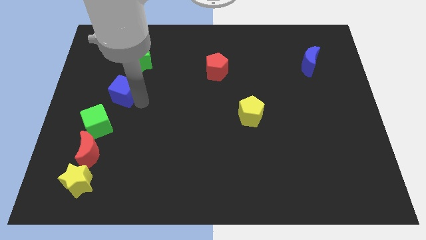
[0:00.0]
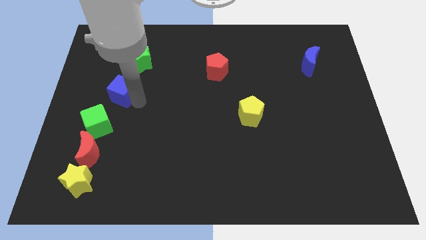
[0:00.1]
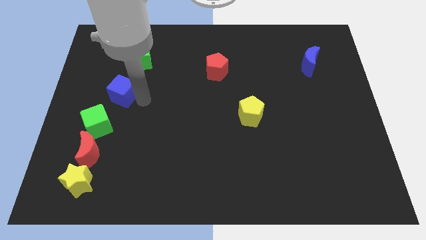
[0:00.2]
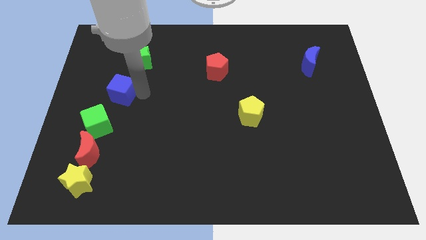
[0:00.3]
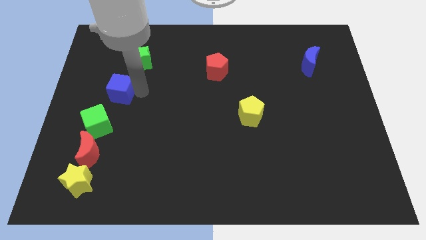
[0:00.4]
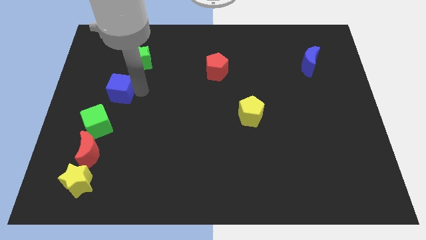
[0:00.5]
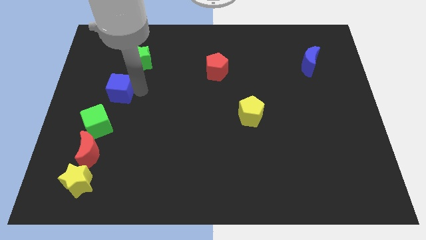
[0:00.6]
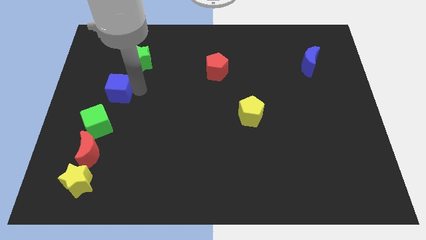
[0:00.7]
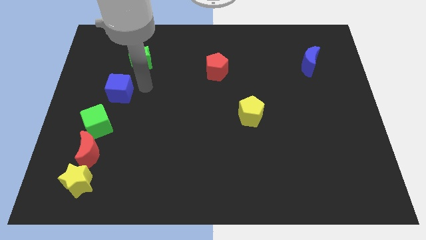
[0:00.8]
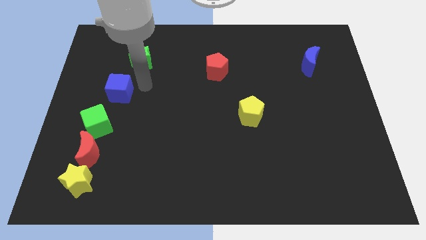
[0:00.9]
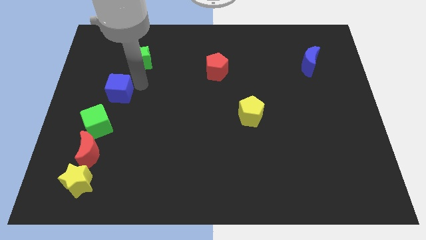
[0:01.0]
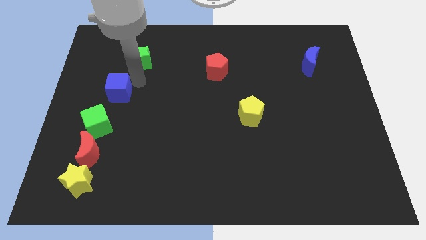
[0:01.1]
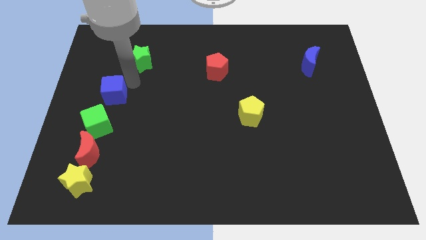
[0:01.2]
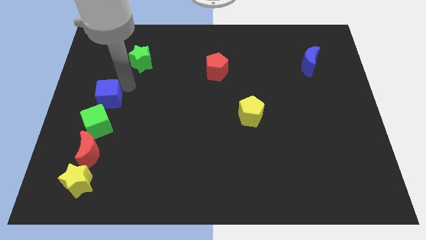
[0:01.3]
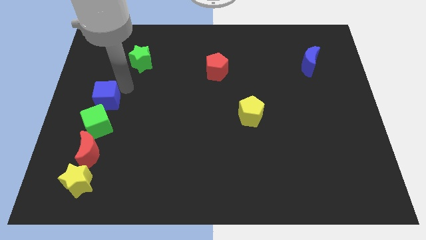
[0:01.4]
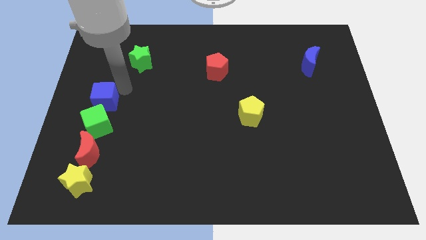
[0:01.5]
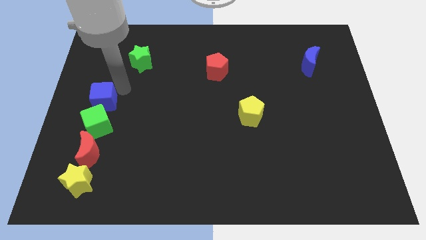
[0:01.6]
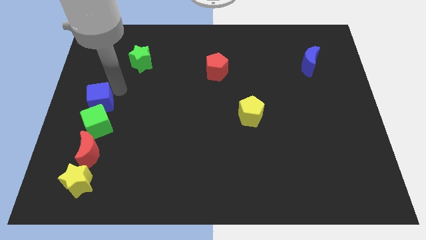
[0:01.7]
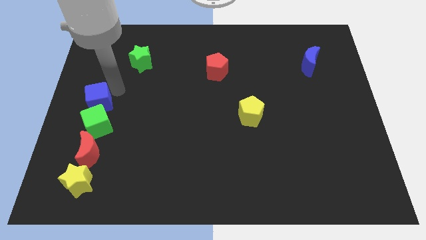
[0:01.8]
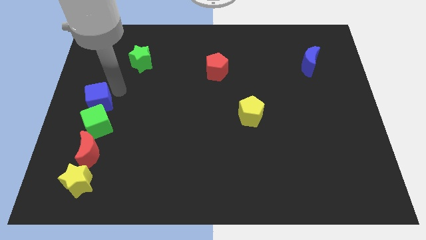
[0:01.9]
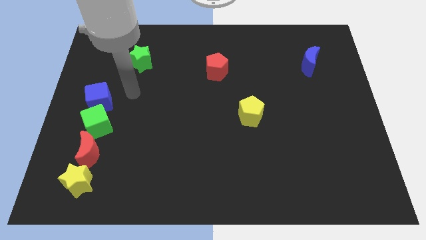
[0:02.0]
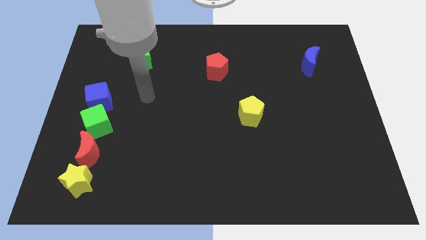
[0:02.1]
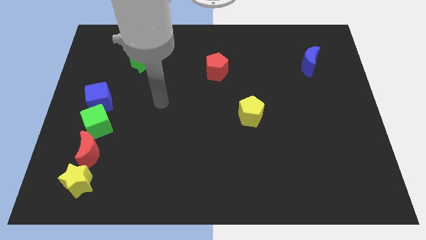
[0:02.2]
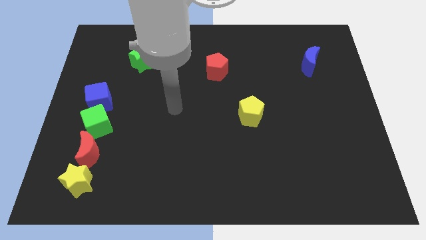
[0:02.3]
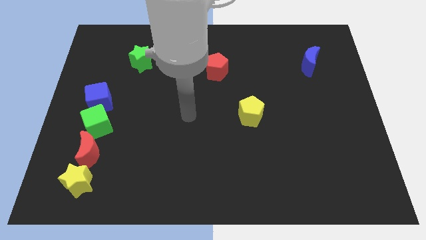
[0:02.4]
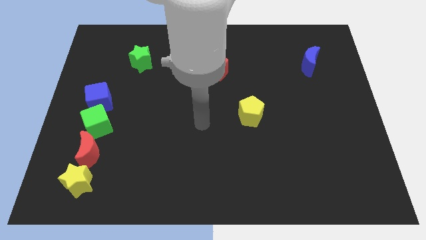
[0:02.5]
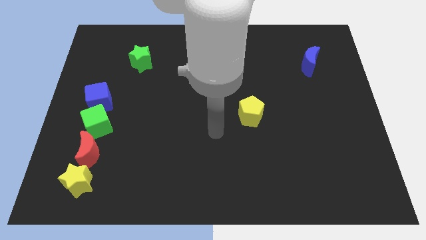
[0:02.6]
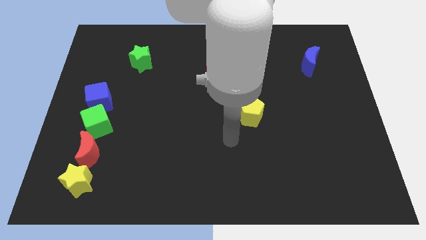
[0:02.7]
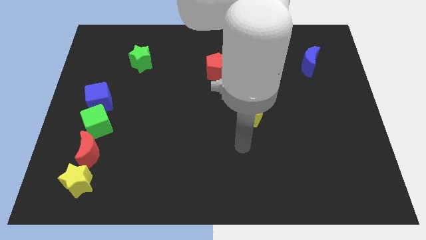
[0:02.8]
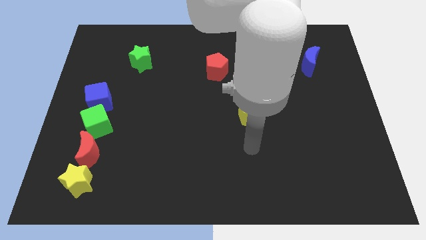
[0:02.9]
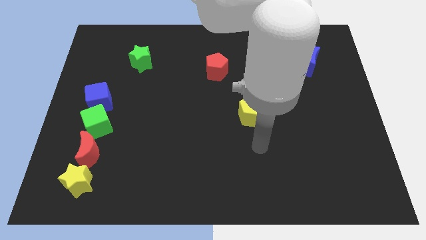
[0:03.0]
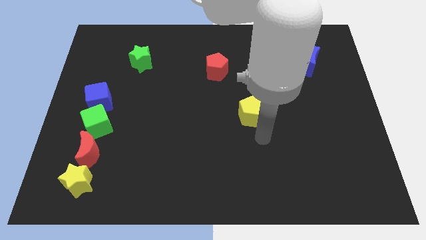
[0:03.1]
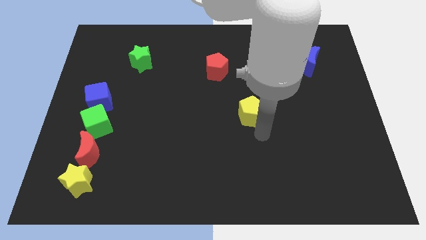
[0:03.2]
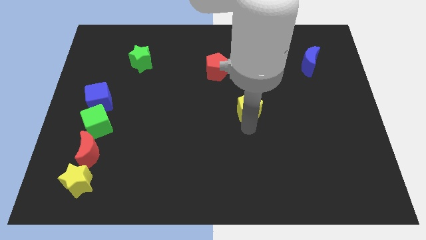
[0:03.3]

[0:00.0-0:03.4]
place the blue cube to the left center of the board

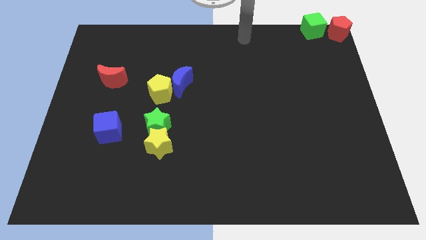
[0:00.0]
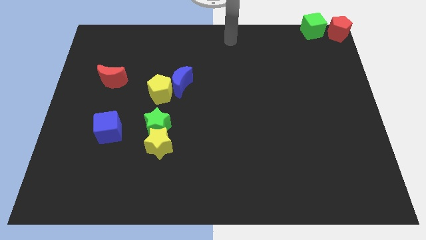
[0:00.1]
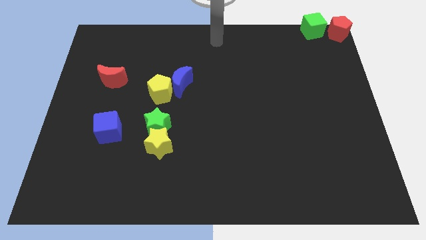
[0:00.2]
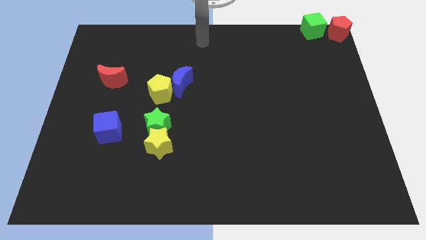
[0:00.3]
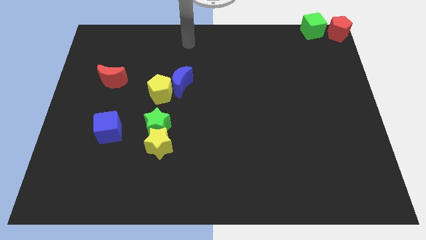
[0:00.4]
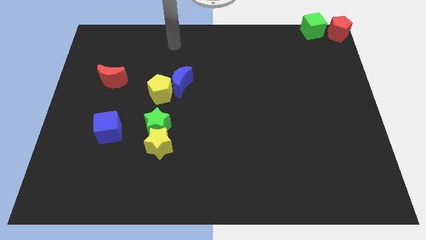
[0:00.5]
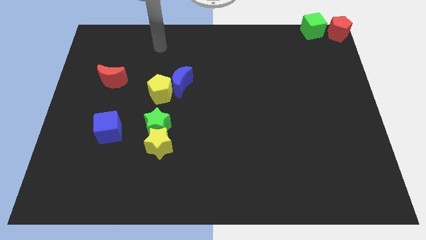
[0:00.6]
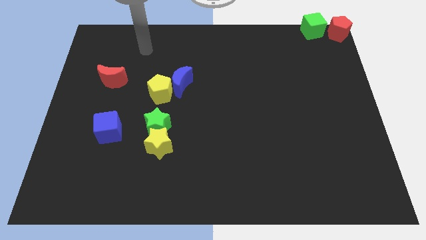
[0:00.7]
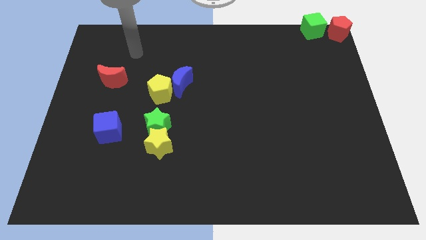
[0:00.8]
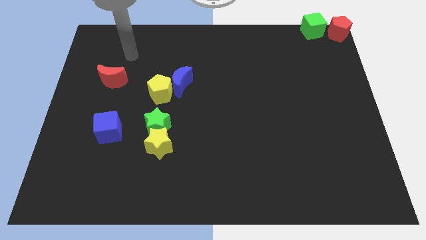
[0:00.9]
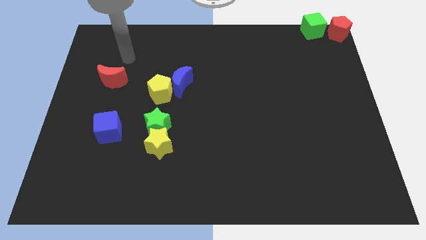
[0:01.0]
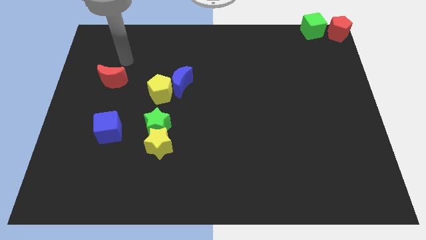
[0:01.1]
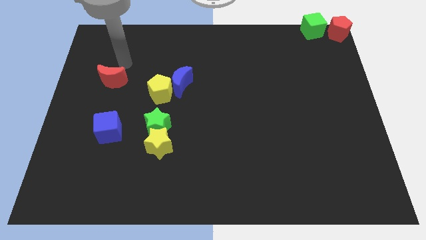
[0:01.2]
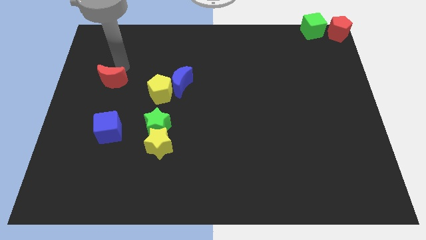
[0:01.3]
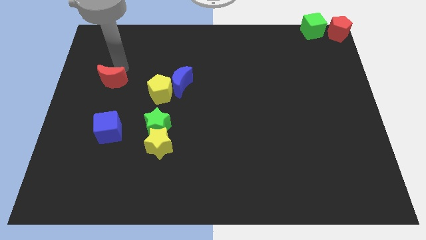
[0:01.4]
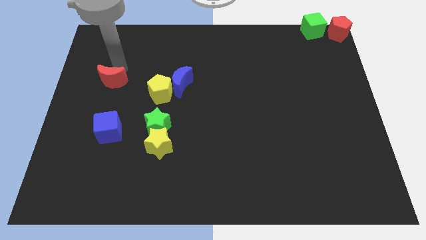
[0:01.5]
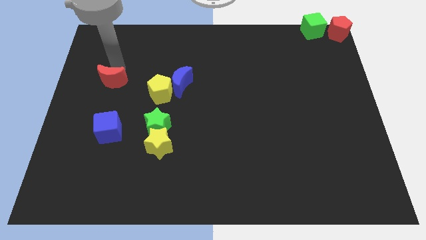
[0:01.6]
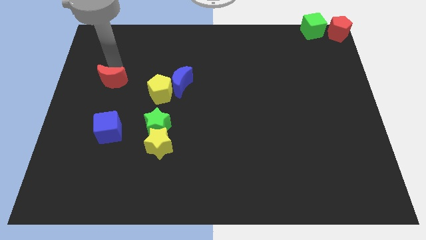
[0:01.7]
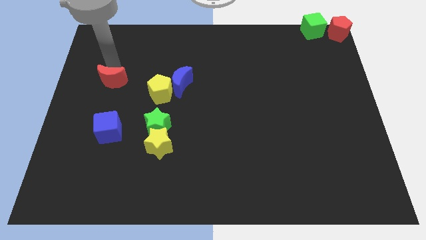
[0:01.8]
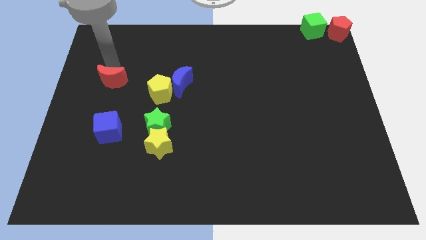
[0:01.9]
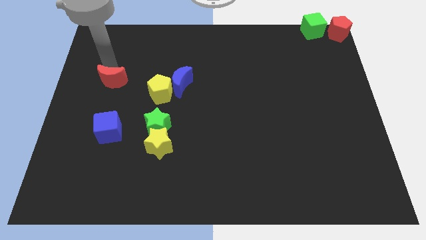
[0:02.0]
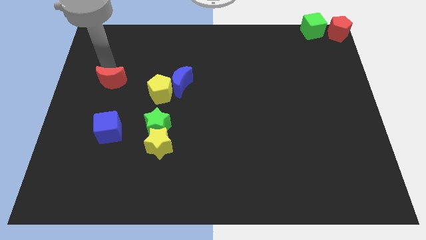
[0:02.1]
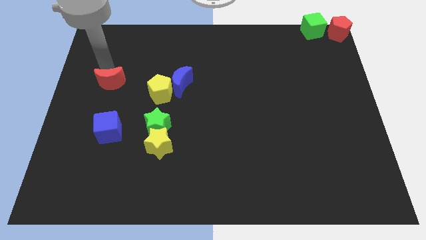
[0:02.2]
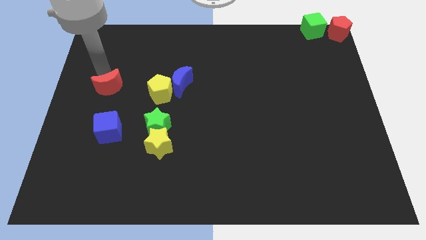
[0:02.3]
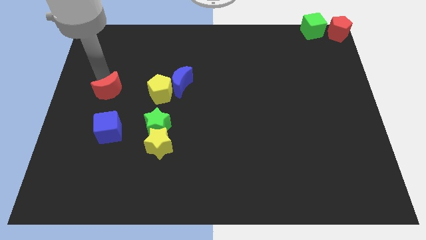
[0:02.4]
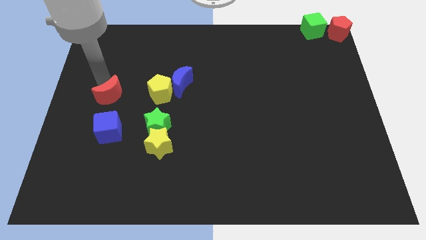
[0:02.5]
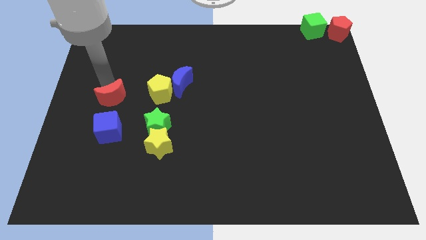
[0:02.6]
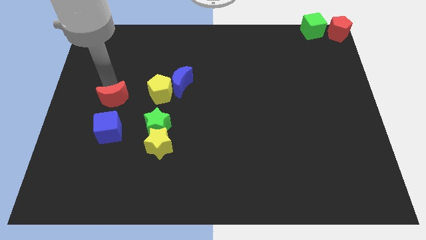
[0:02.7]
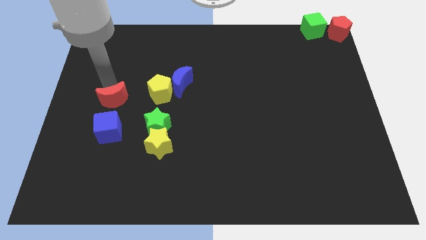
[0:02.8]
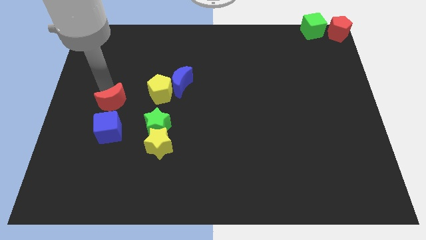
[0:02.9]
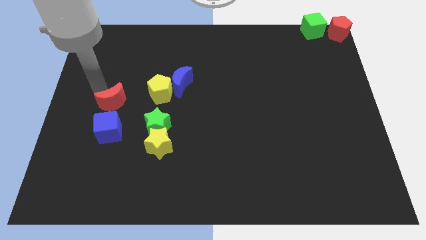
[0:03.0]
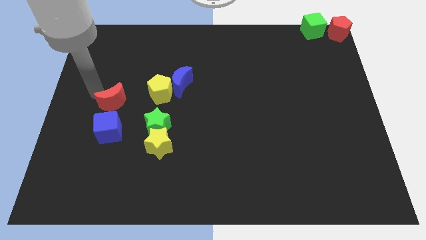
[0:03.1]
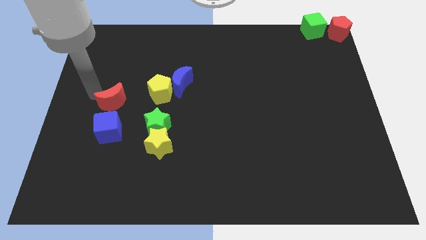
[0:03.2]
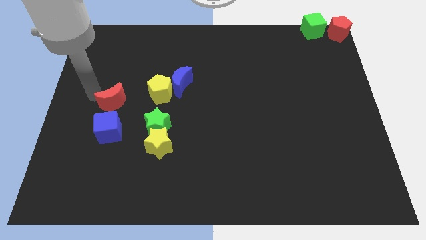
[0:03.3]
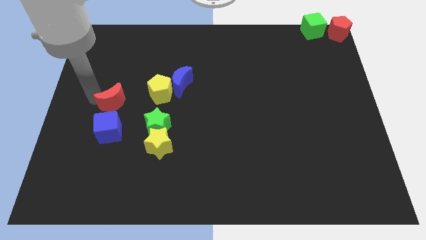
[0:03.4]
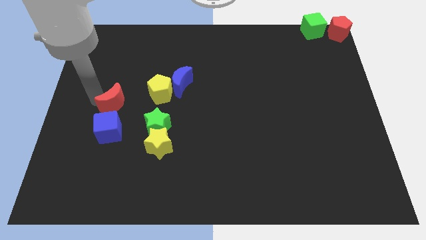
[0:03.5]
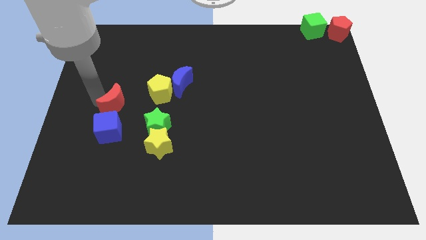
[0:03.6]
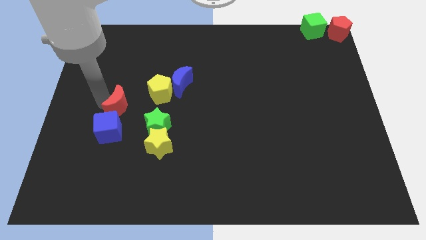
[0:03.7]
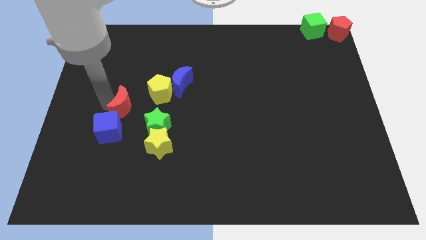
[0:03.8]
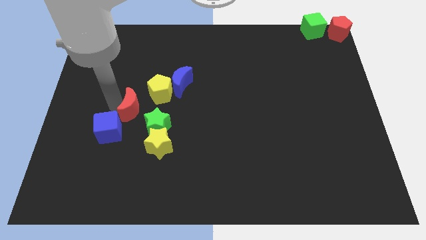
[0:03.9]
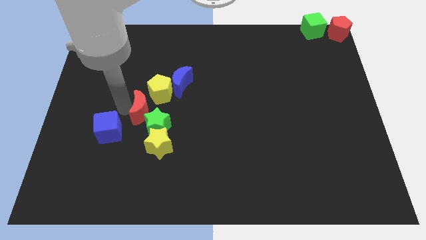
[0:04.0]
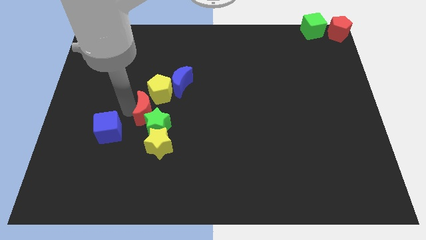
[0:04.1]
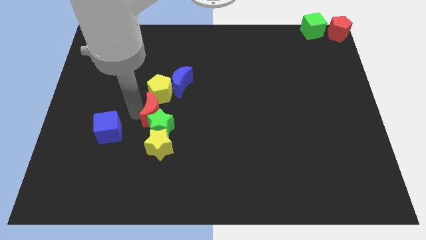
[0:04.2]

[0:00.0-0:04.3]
move the red crescent into the green star

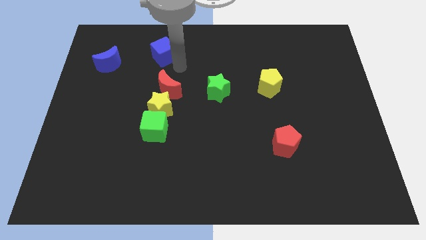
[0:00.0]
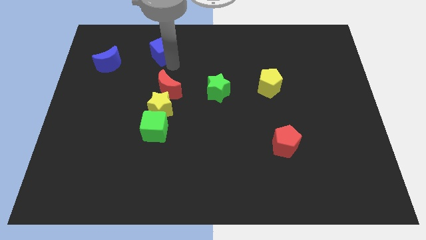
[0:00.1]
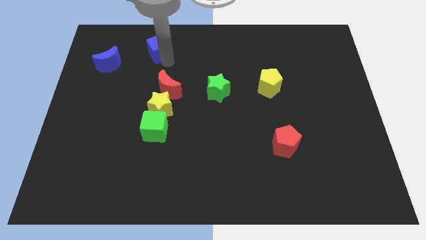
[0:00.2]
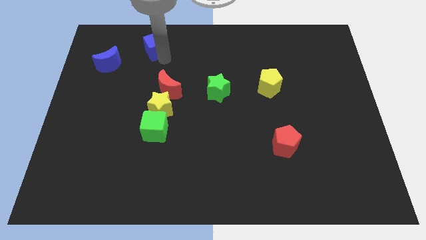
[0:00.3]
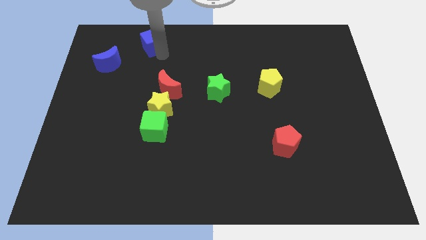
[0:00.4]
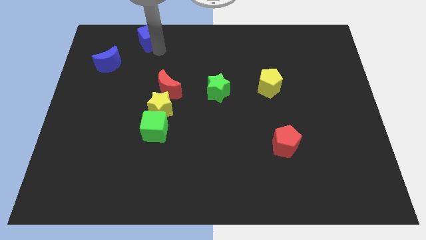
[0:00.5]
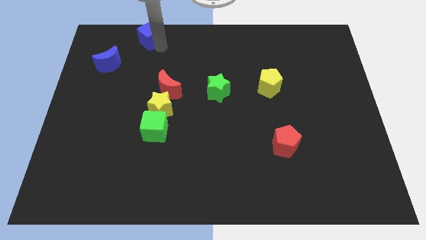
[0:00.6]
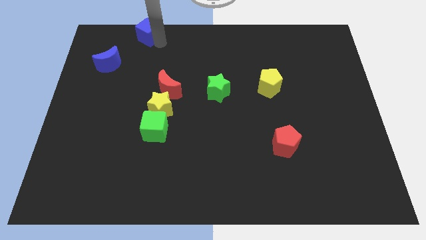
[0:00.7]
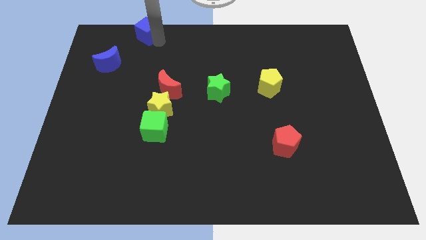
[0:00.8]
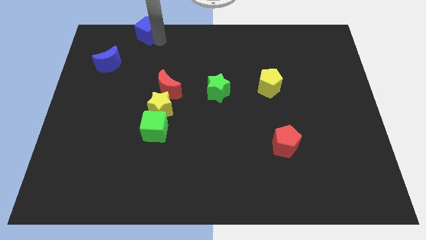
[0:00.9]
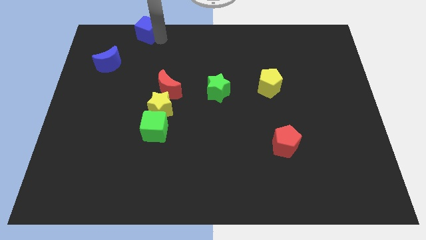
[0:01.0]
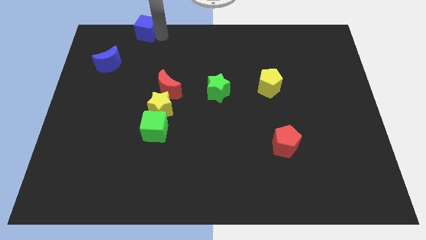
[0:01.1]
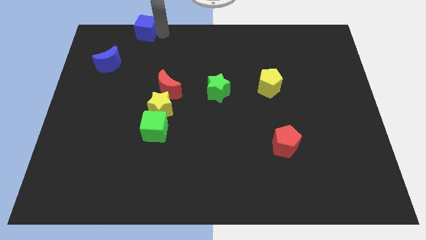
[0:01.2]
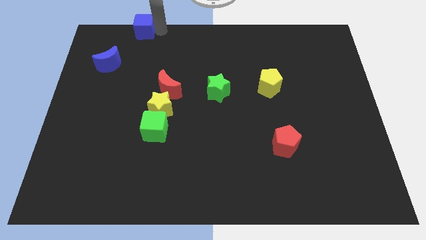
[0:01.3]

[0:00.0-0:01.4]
push the blue cube to the top of the board
